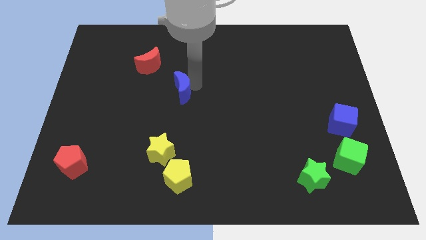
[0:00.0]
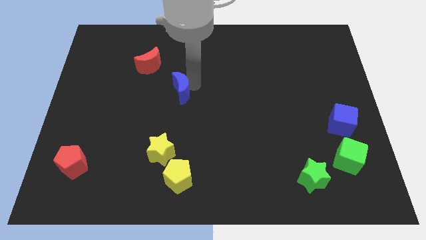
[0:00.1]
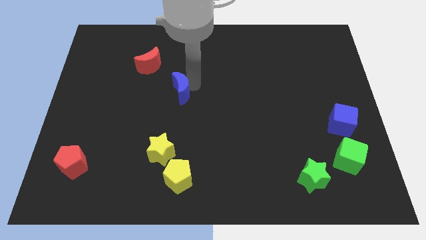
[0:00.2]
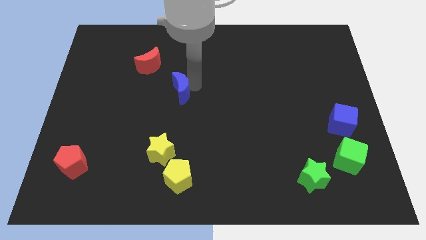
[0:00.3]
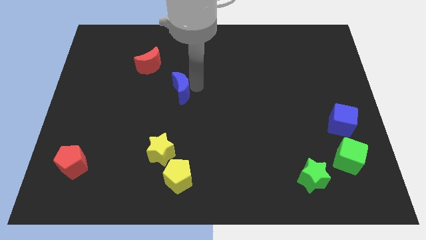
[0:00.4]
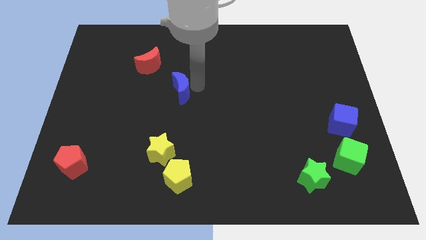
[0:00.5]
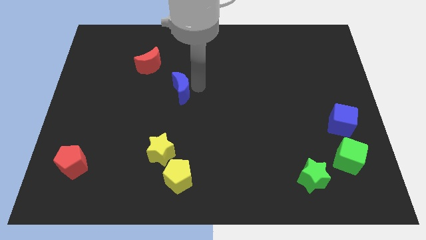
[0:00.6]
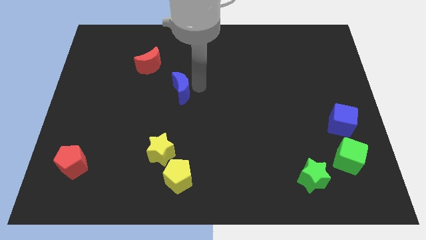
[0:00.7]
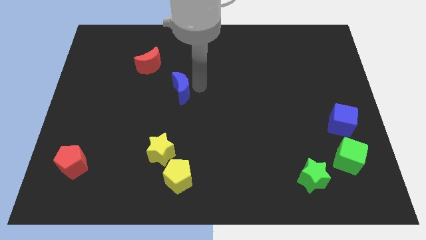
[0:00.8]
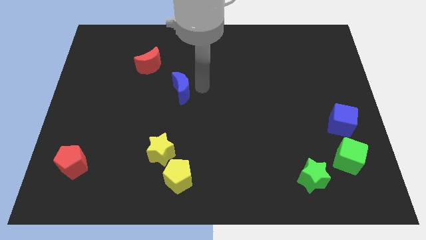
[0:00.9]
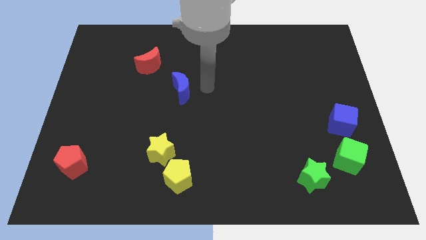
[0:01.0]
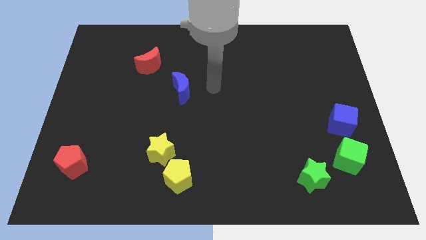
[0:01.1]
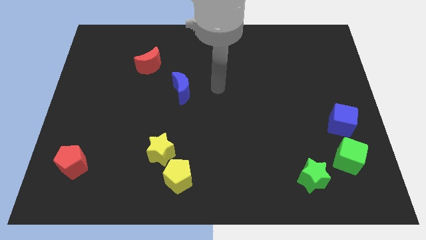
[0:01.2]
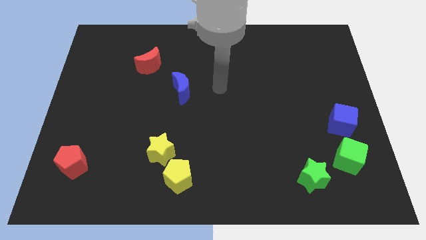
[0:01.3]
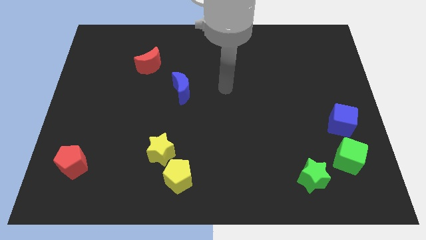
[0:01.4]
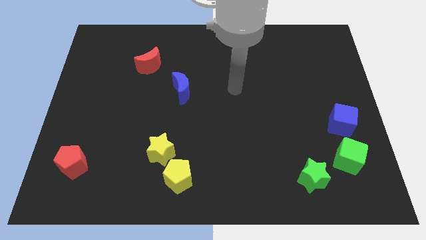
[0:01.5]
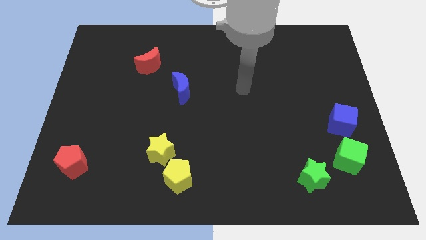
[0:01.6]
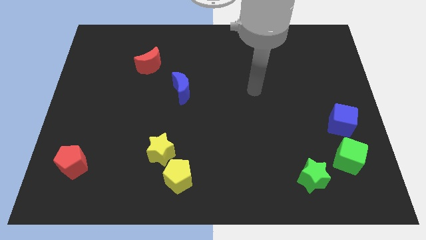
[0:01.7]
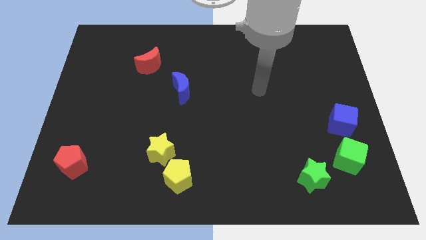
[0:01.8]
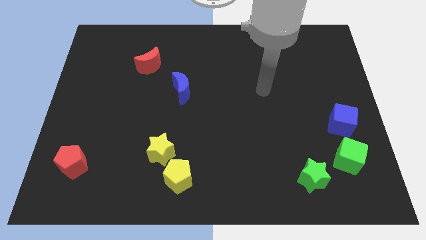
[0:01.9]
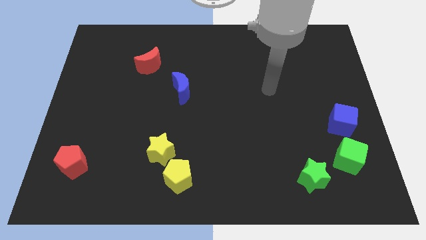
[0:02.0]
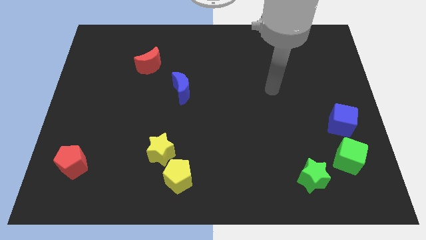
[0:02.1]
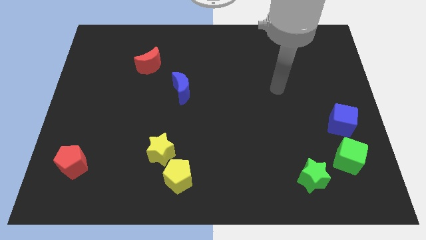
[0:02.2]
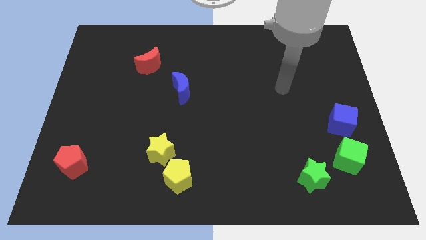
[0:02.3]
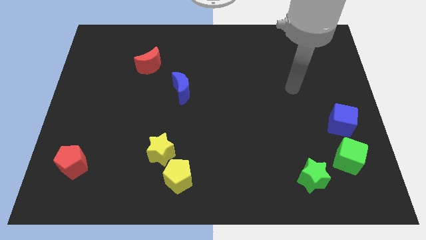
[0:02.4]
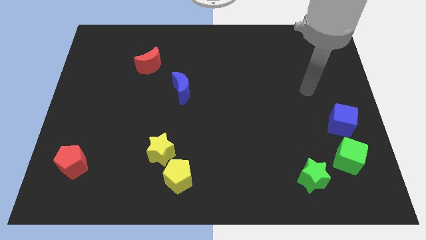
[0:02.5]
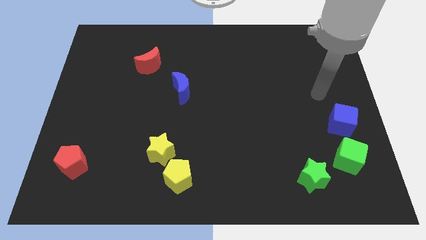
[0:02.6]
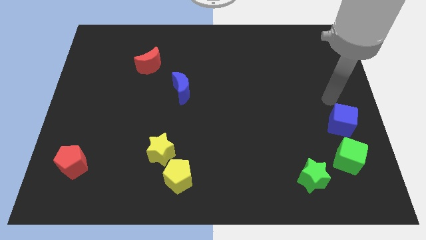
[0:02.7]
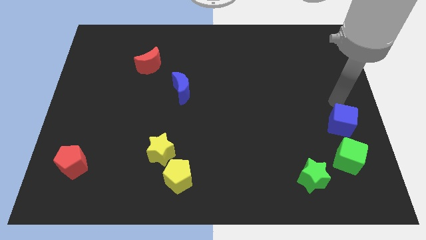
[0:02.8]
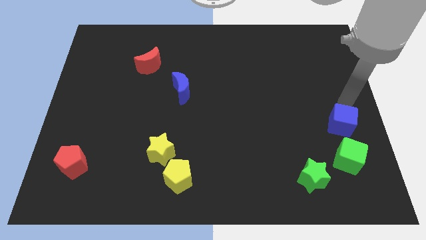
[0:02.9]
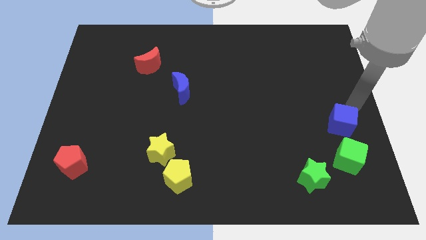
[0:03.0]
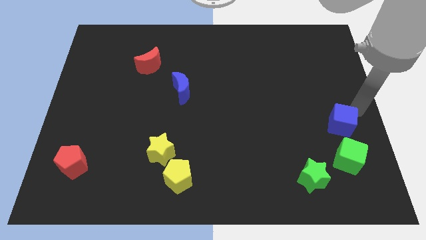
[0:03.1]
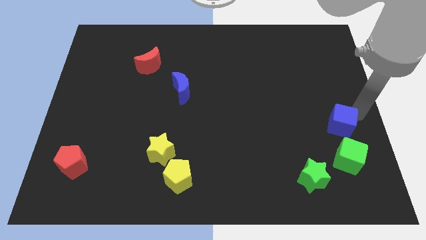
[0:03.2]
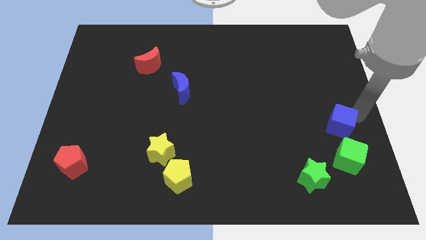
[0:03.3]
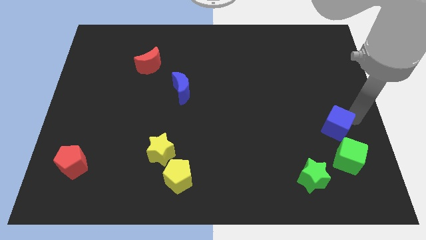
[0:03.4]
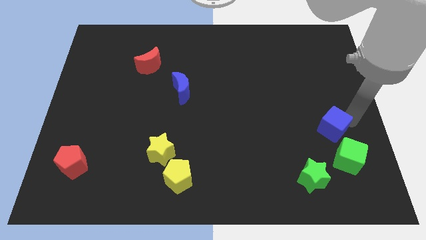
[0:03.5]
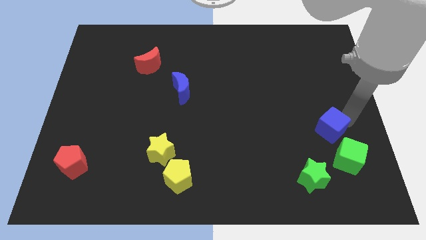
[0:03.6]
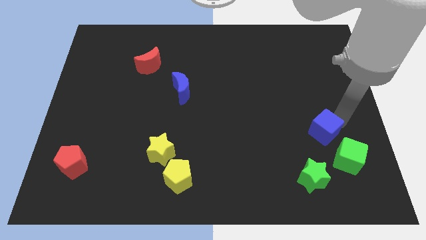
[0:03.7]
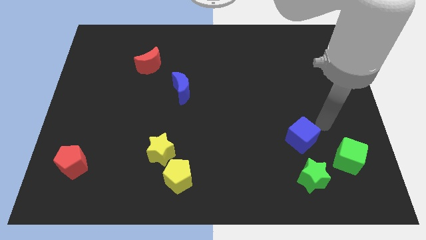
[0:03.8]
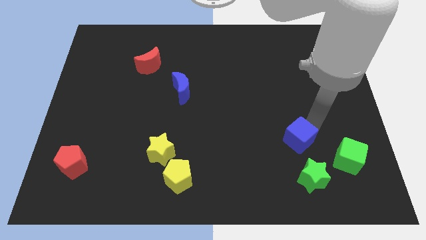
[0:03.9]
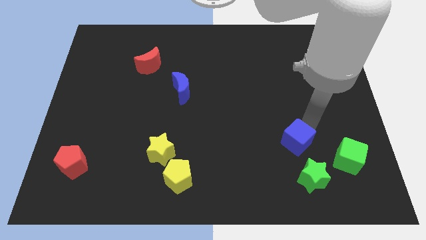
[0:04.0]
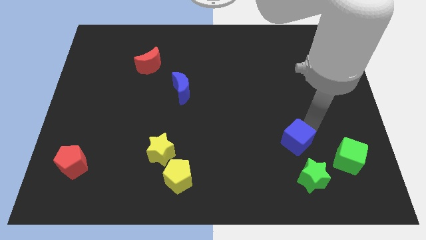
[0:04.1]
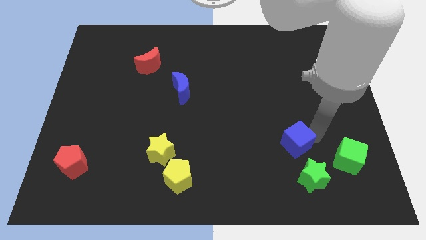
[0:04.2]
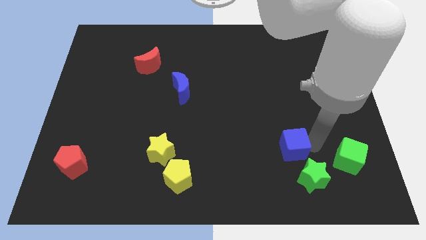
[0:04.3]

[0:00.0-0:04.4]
move the blue cube close to the green star

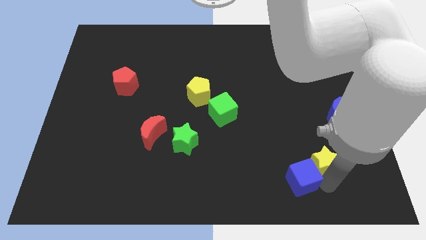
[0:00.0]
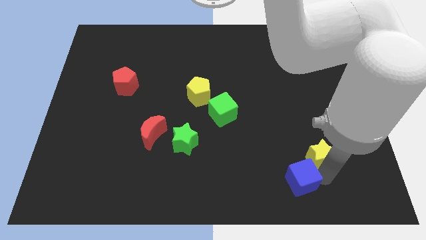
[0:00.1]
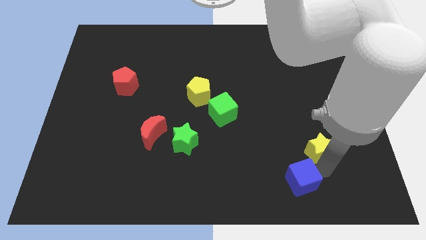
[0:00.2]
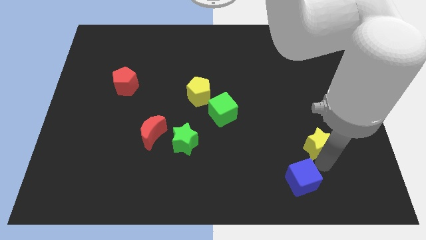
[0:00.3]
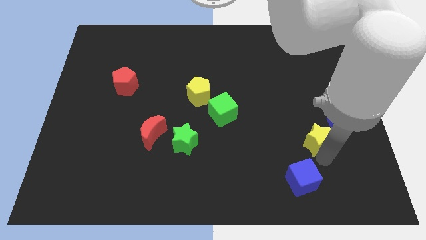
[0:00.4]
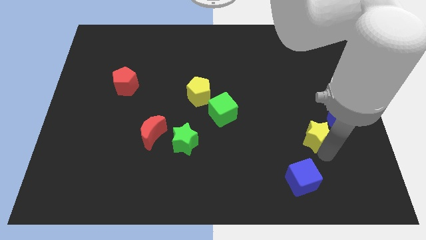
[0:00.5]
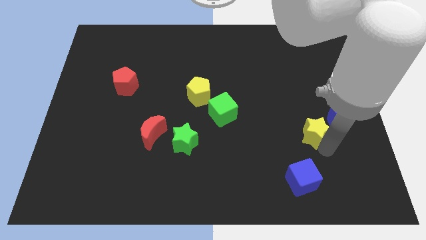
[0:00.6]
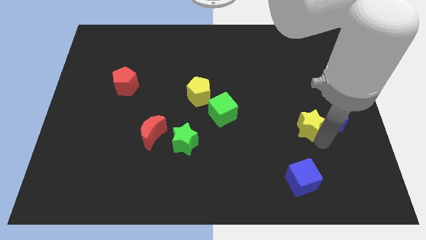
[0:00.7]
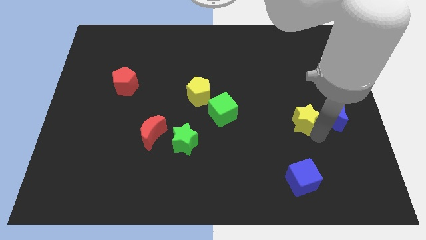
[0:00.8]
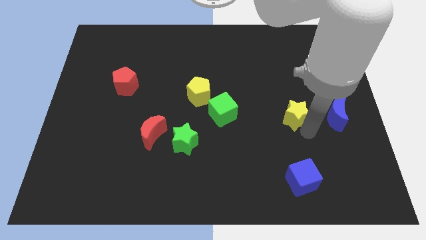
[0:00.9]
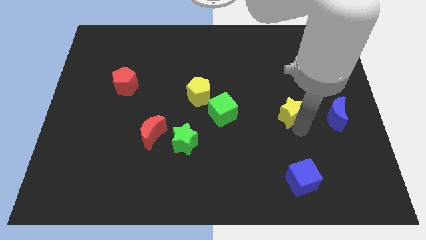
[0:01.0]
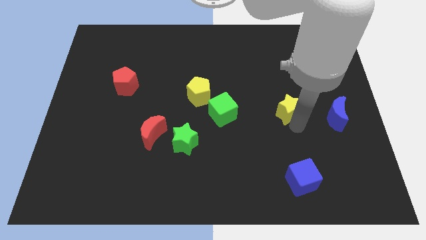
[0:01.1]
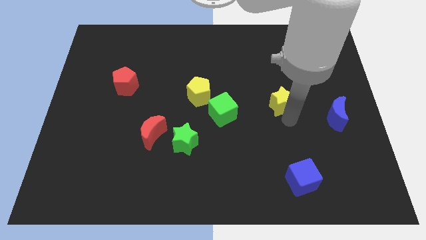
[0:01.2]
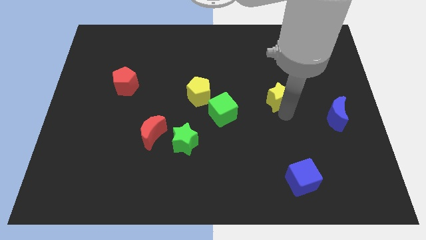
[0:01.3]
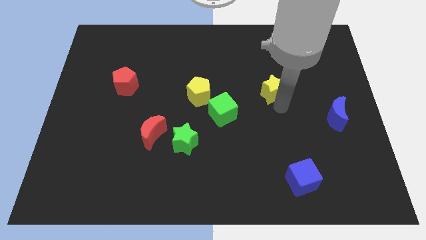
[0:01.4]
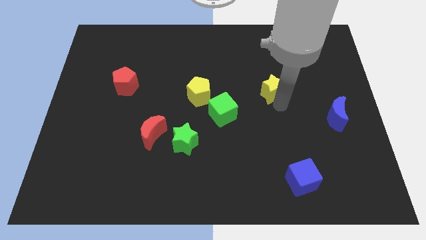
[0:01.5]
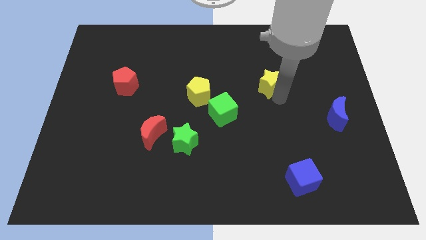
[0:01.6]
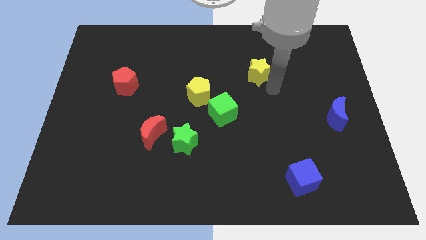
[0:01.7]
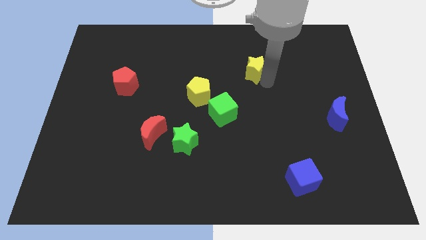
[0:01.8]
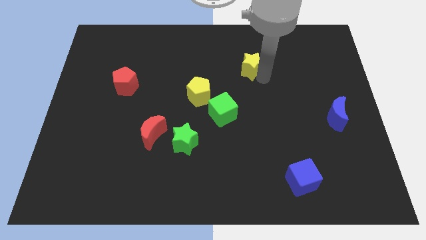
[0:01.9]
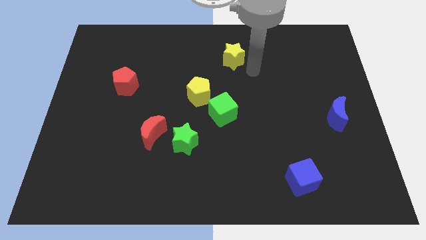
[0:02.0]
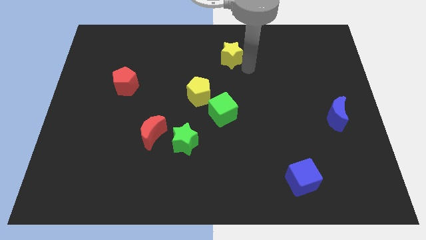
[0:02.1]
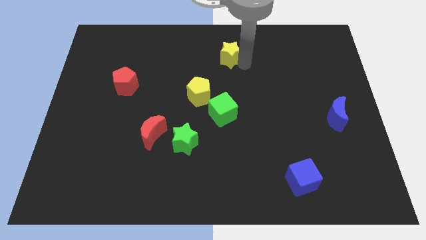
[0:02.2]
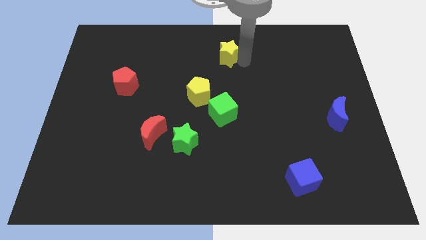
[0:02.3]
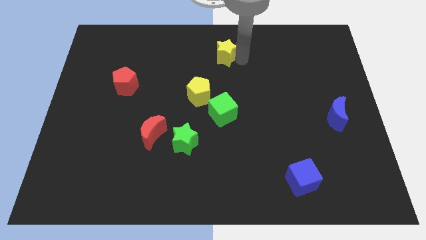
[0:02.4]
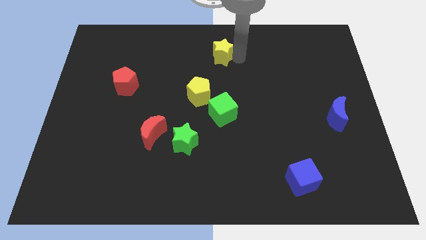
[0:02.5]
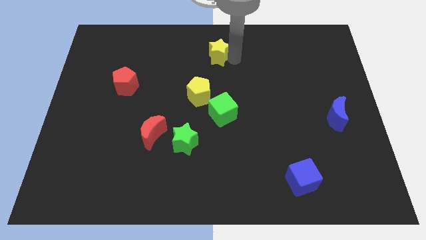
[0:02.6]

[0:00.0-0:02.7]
place the yellow star to the top of the green cube

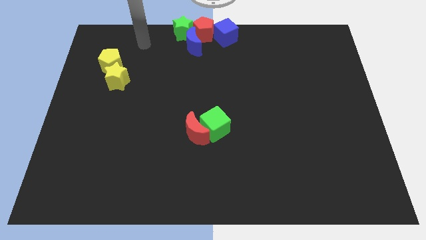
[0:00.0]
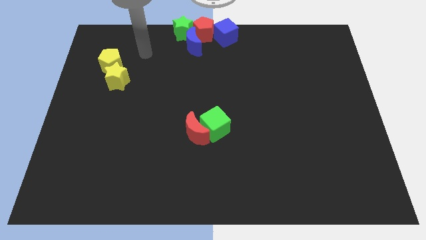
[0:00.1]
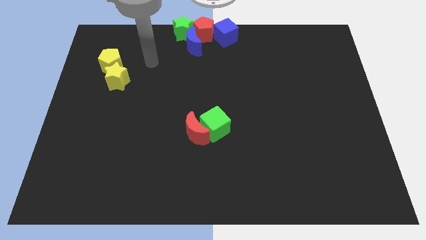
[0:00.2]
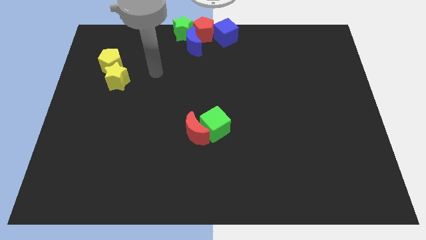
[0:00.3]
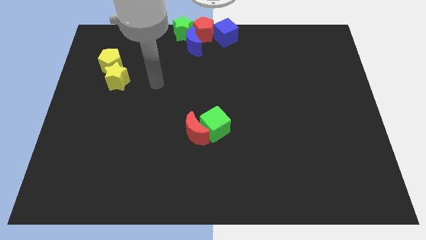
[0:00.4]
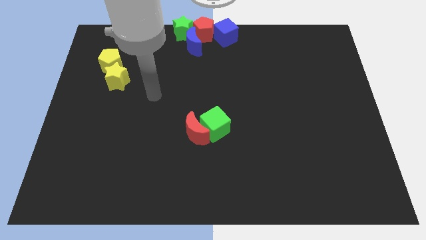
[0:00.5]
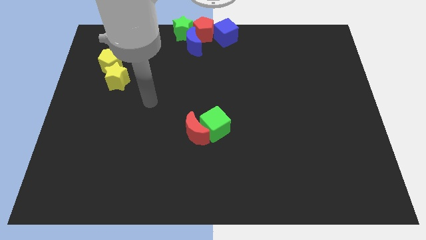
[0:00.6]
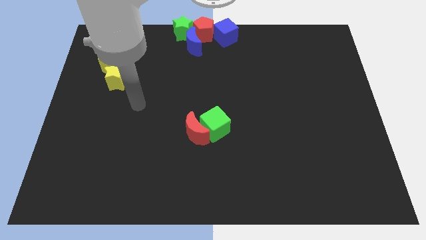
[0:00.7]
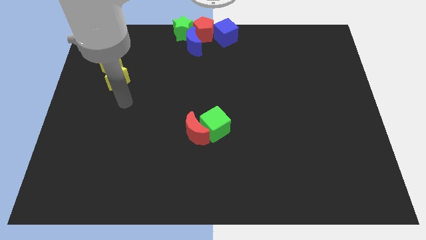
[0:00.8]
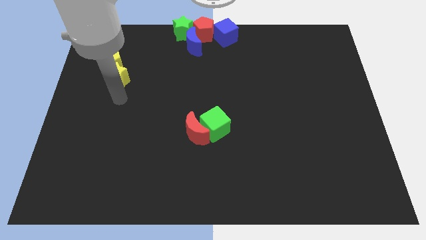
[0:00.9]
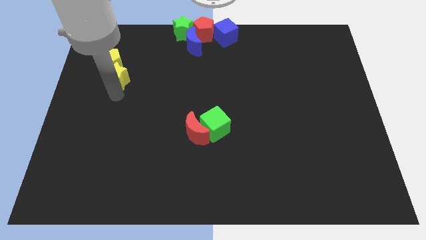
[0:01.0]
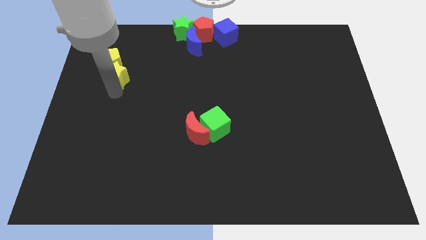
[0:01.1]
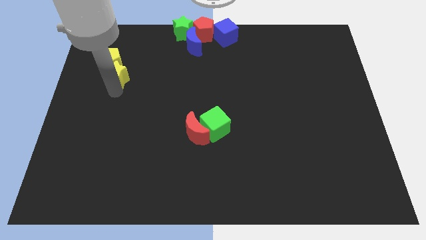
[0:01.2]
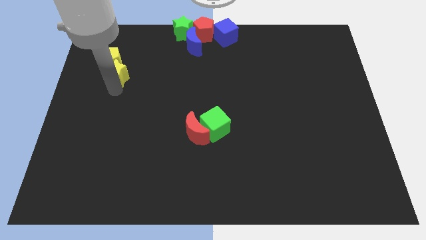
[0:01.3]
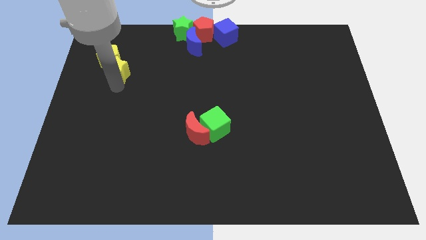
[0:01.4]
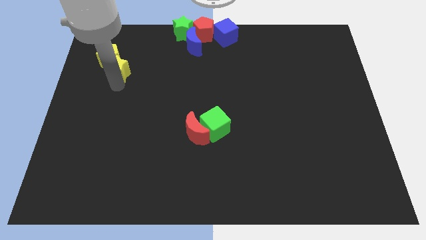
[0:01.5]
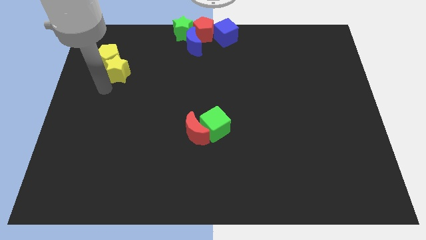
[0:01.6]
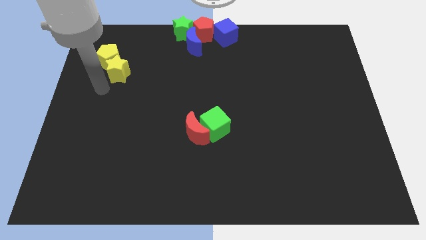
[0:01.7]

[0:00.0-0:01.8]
push the yellow star into the yellow pentagon
